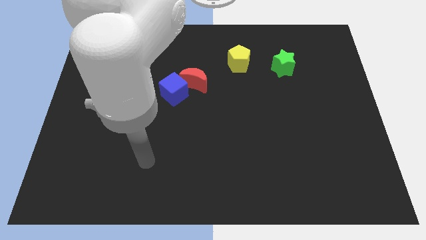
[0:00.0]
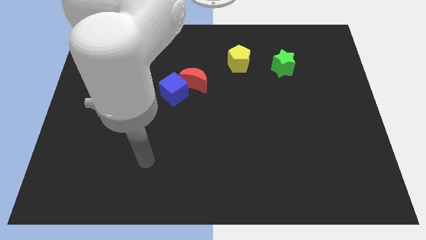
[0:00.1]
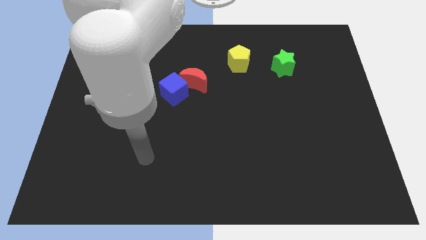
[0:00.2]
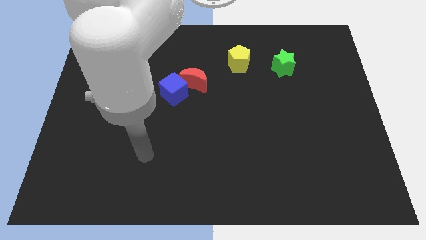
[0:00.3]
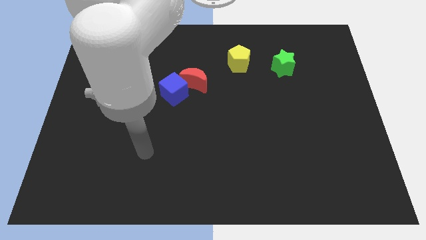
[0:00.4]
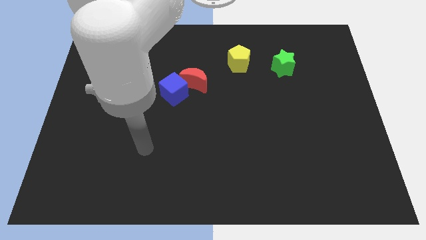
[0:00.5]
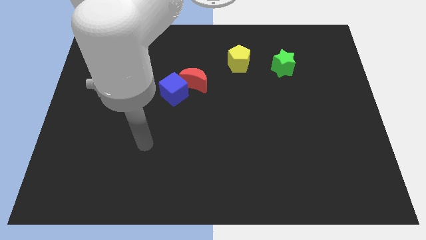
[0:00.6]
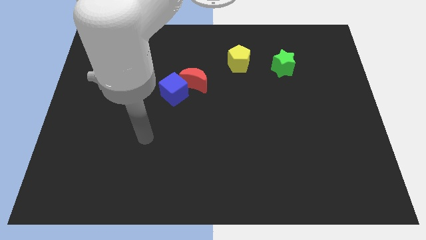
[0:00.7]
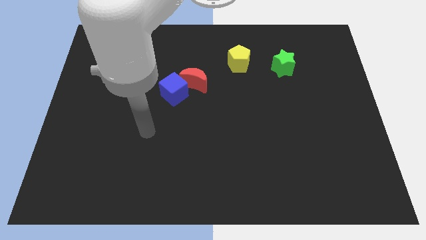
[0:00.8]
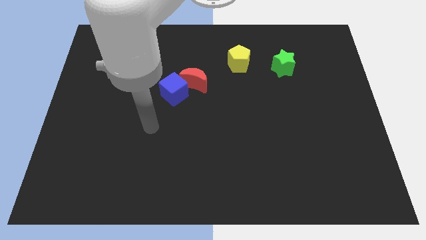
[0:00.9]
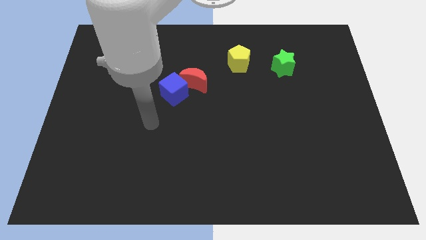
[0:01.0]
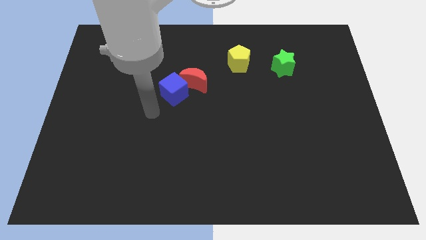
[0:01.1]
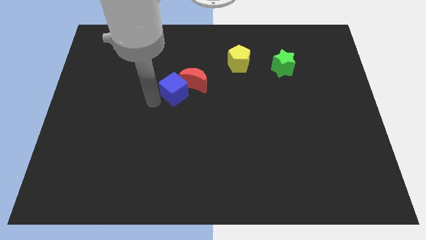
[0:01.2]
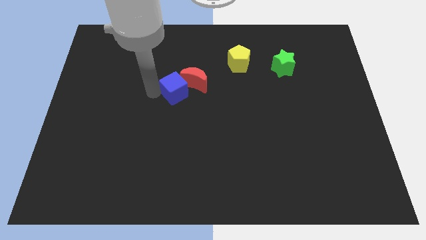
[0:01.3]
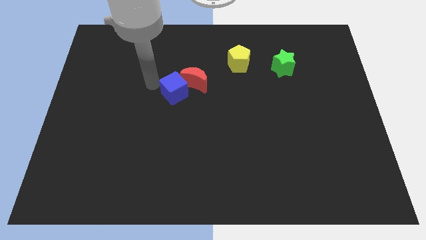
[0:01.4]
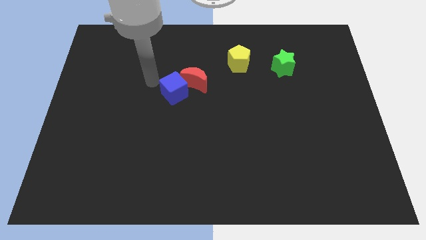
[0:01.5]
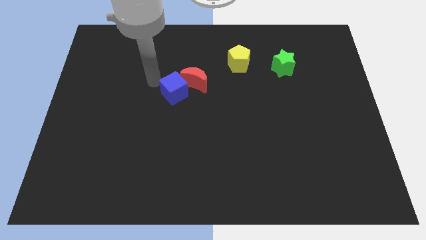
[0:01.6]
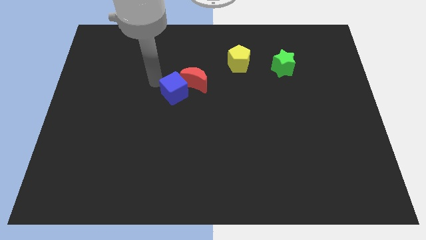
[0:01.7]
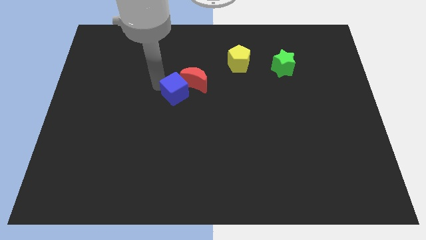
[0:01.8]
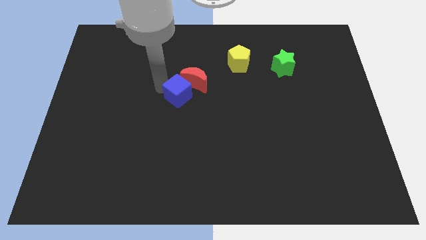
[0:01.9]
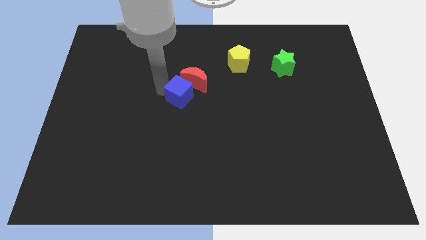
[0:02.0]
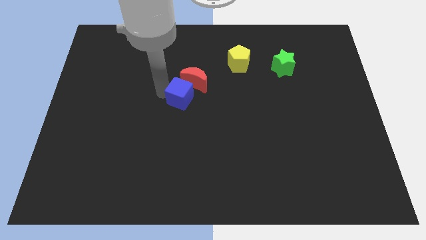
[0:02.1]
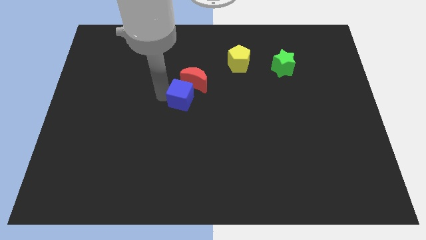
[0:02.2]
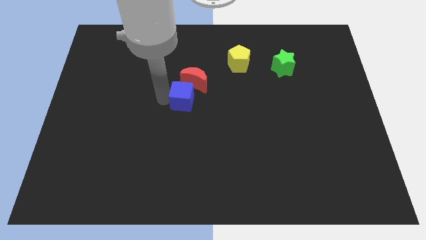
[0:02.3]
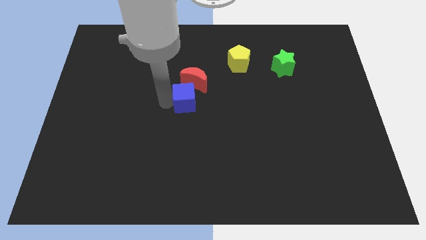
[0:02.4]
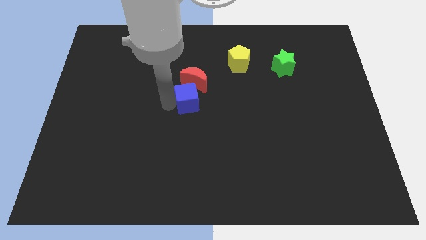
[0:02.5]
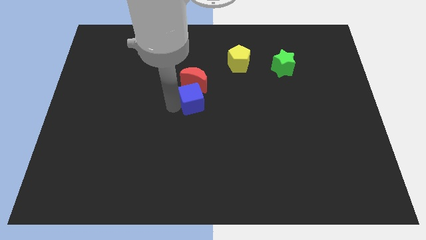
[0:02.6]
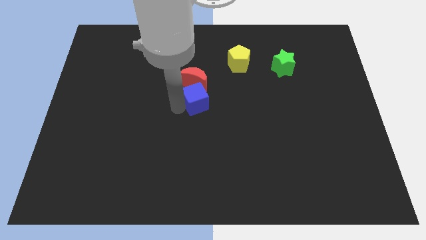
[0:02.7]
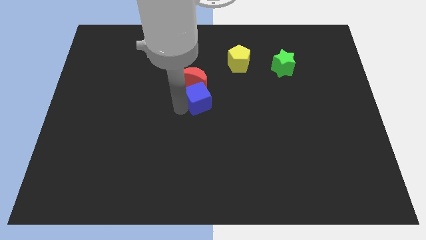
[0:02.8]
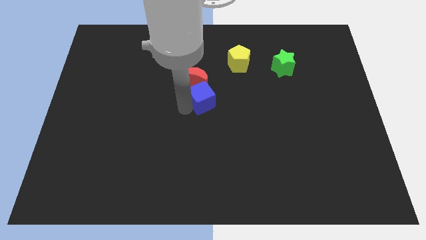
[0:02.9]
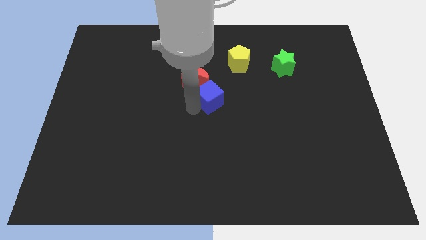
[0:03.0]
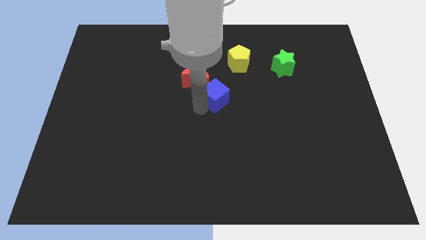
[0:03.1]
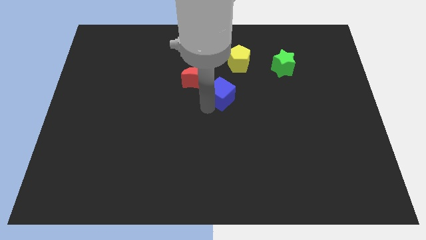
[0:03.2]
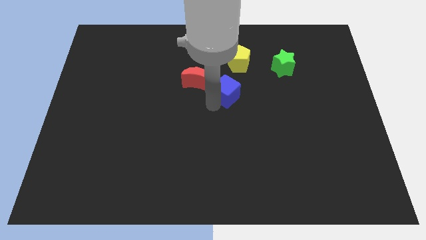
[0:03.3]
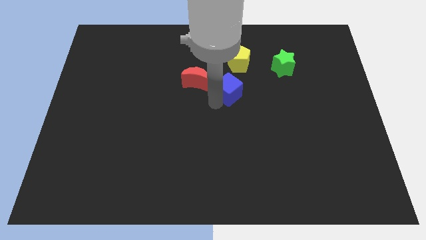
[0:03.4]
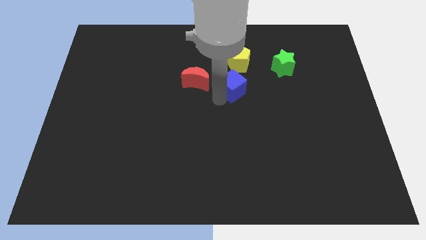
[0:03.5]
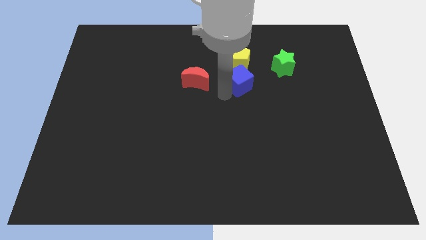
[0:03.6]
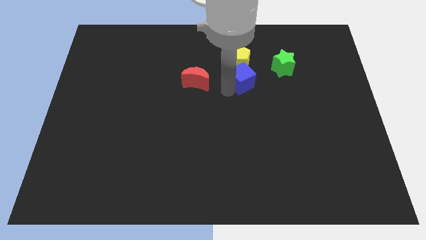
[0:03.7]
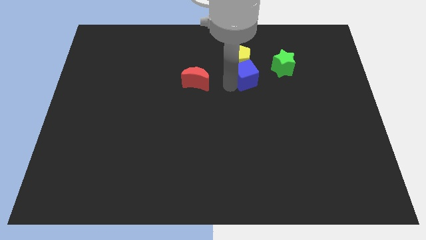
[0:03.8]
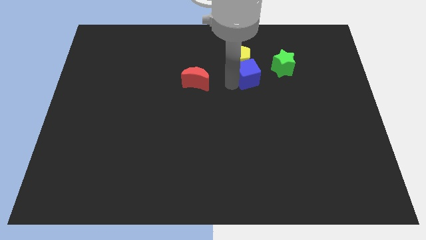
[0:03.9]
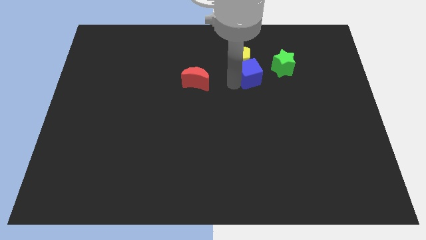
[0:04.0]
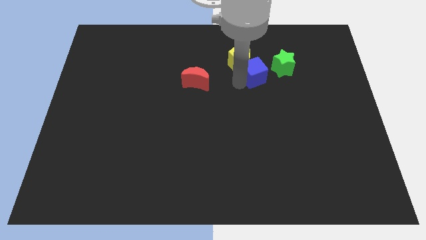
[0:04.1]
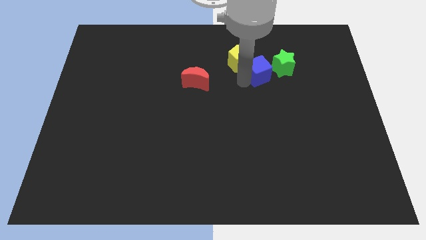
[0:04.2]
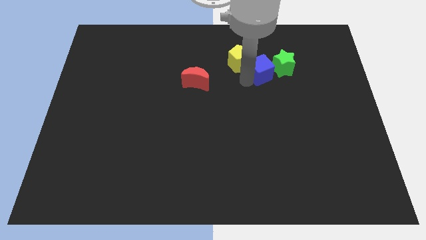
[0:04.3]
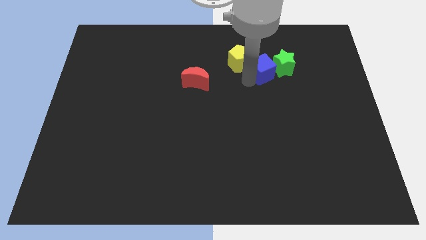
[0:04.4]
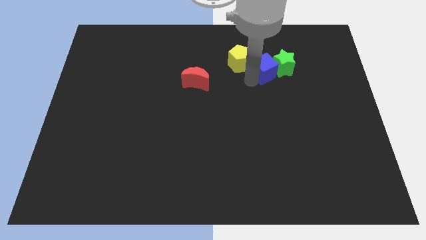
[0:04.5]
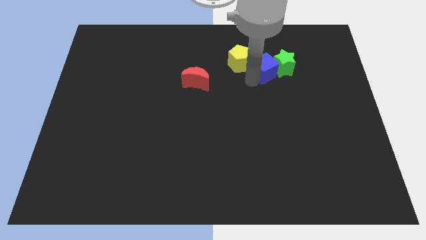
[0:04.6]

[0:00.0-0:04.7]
put the blue block close to the star

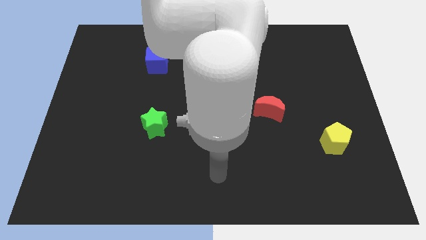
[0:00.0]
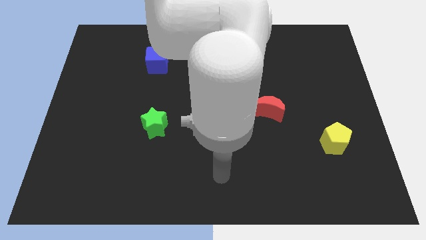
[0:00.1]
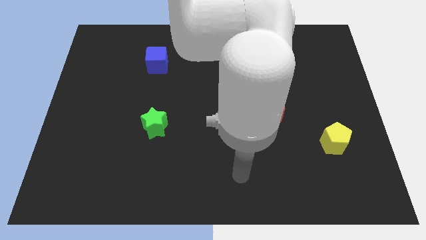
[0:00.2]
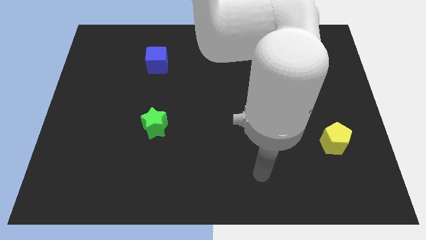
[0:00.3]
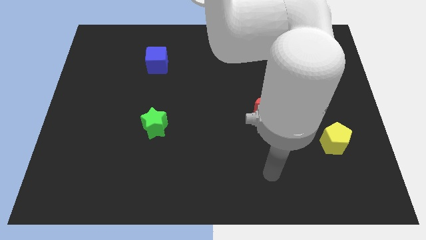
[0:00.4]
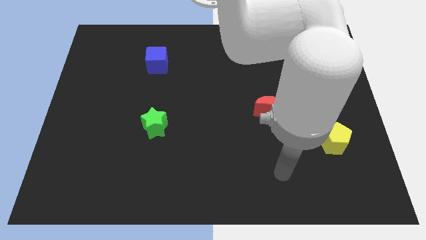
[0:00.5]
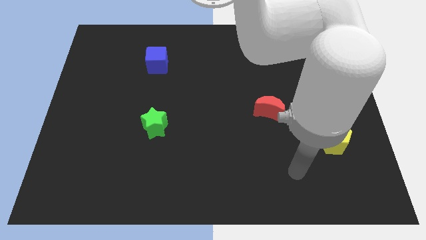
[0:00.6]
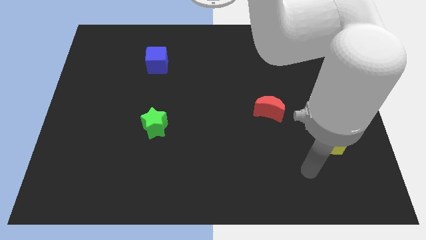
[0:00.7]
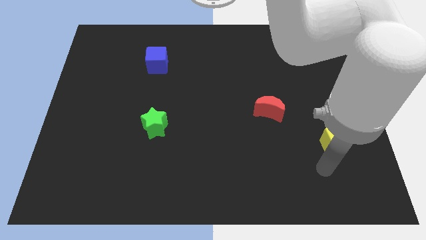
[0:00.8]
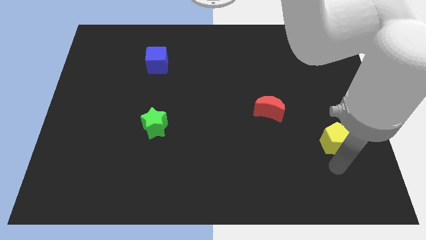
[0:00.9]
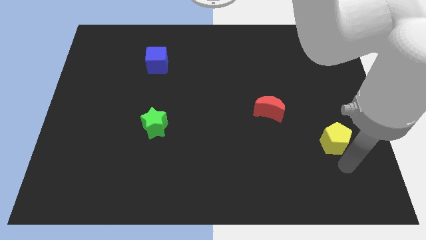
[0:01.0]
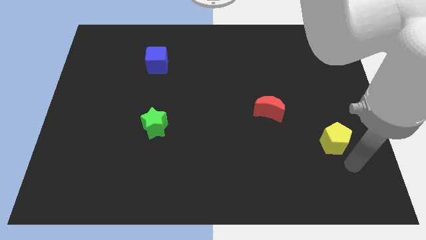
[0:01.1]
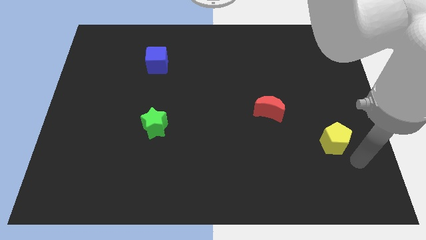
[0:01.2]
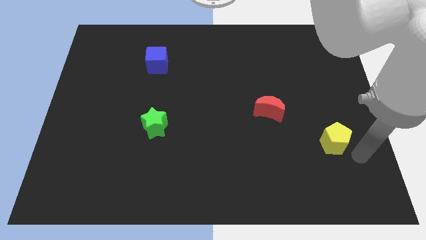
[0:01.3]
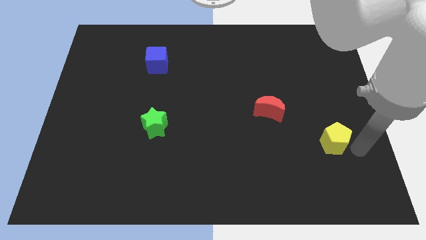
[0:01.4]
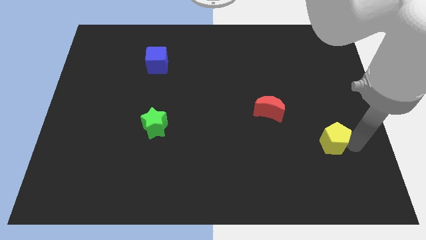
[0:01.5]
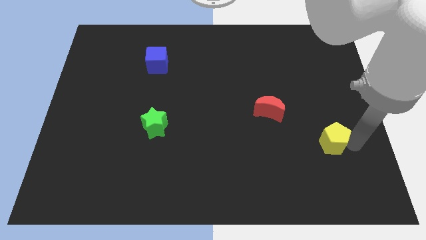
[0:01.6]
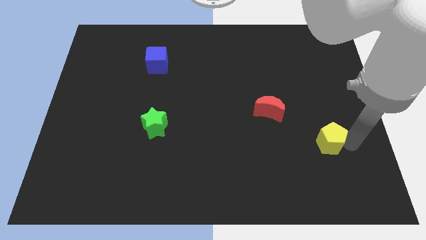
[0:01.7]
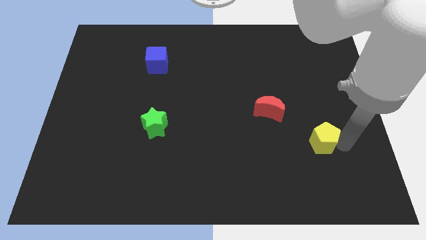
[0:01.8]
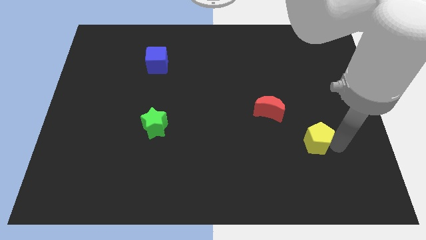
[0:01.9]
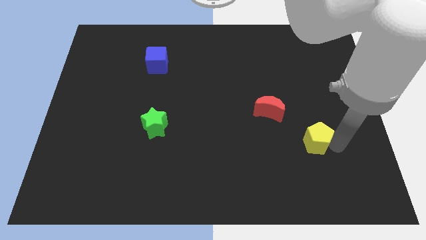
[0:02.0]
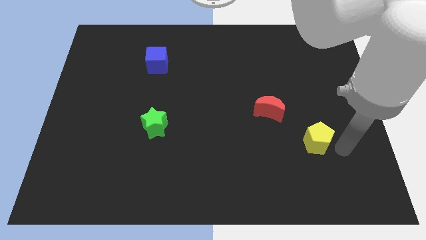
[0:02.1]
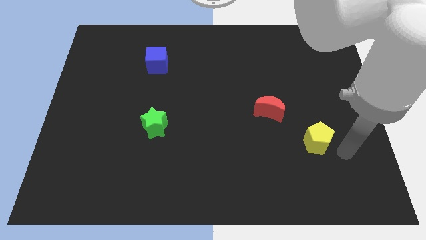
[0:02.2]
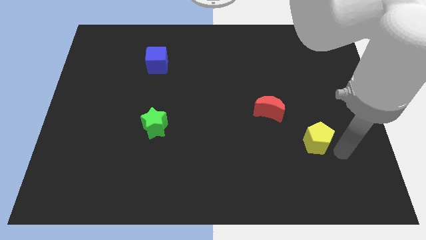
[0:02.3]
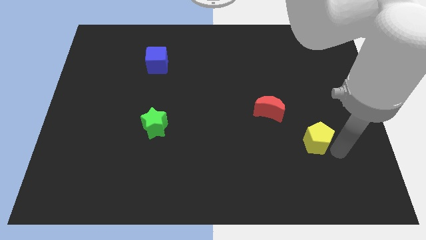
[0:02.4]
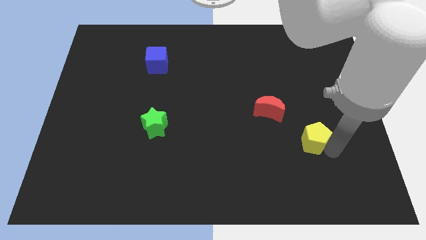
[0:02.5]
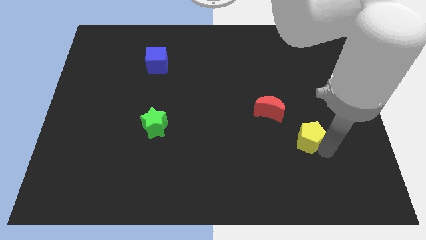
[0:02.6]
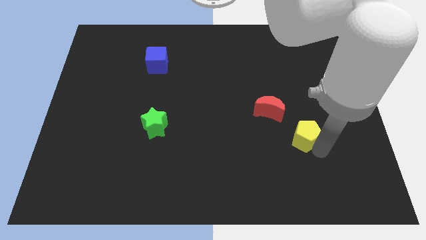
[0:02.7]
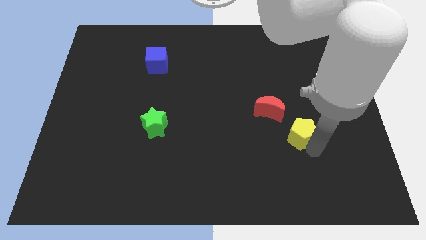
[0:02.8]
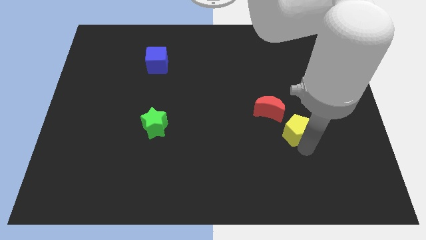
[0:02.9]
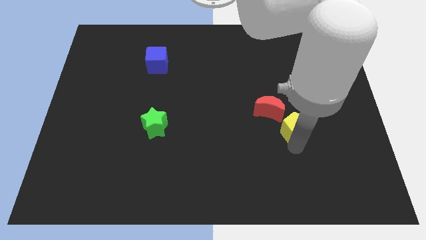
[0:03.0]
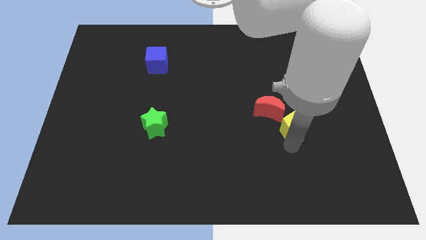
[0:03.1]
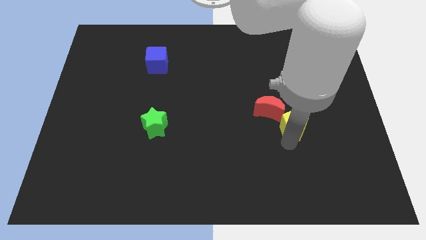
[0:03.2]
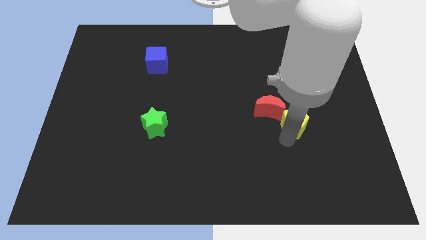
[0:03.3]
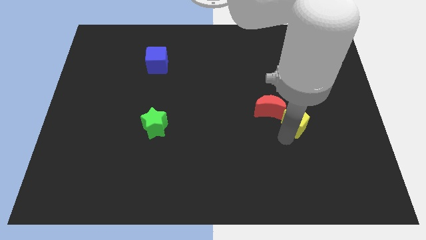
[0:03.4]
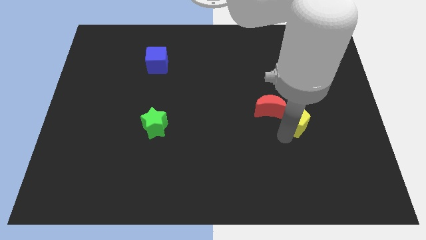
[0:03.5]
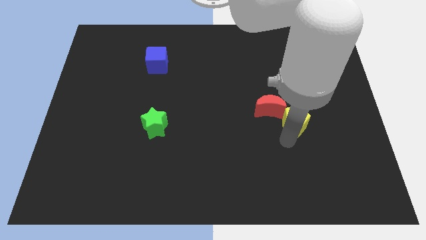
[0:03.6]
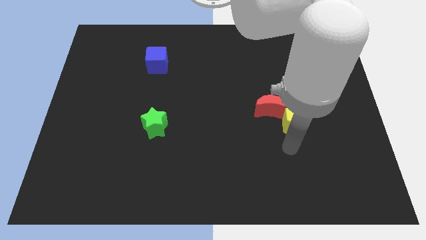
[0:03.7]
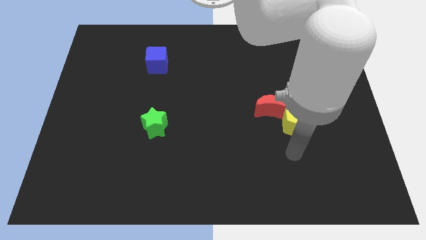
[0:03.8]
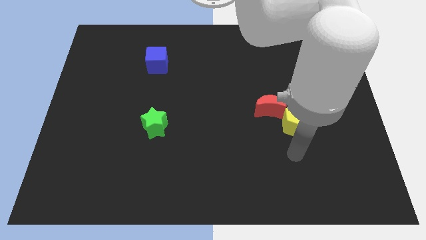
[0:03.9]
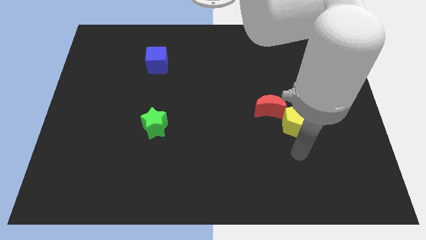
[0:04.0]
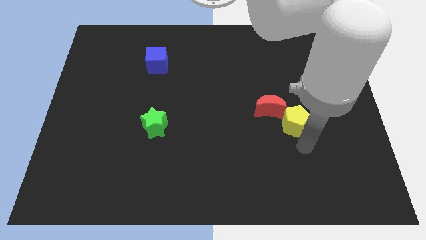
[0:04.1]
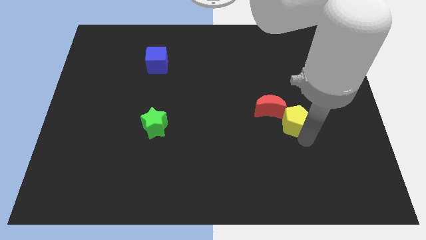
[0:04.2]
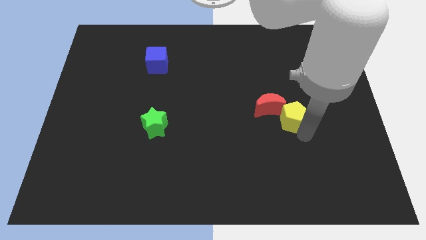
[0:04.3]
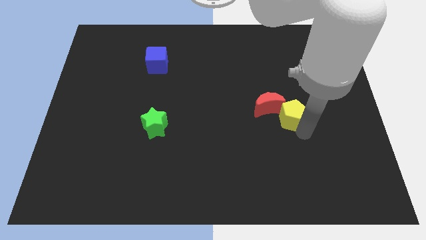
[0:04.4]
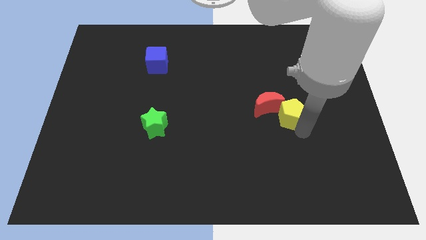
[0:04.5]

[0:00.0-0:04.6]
slide the yellow pentagon towards the red block
